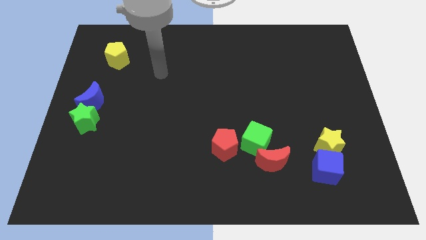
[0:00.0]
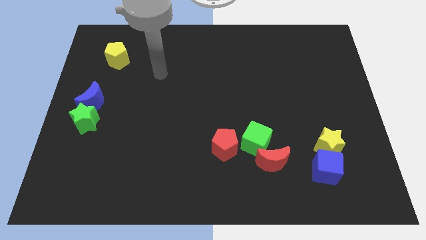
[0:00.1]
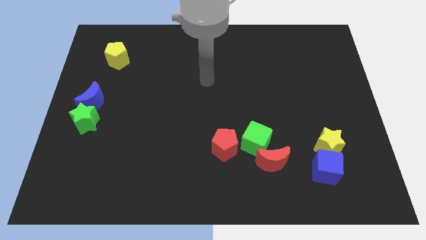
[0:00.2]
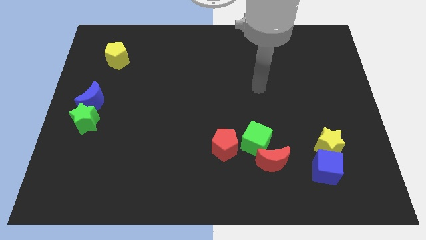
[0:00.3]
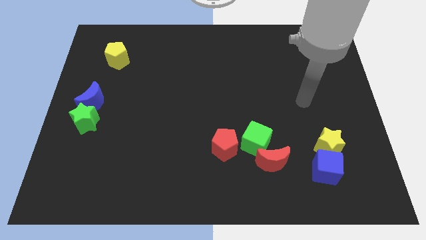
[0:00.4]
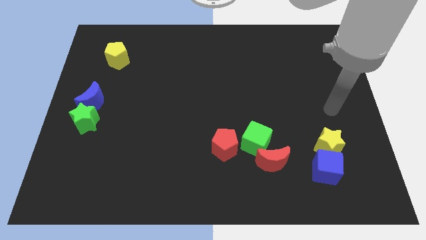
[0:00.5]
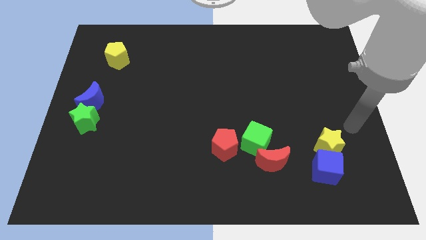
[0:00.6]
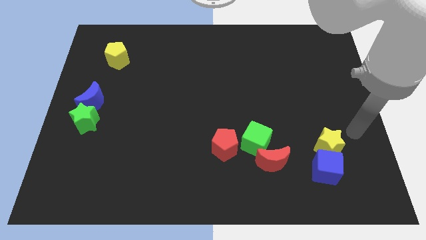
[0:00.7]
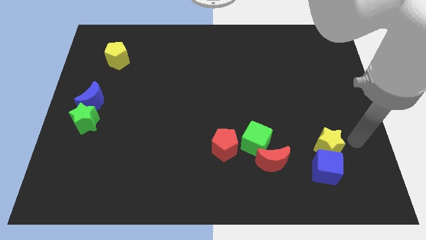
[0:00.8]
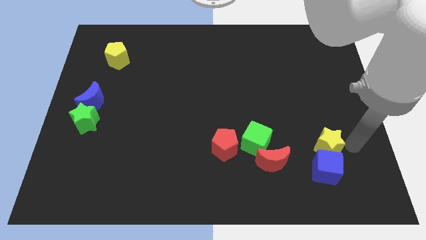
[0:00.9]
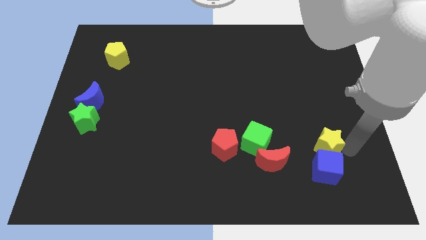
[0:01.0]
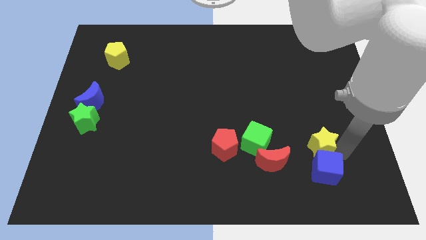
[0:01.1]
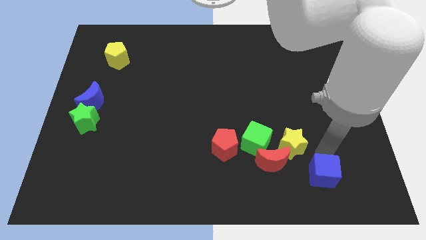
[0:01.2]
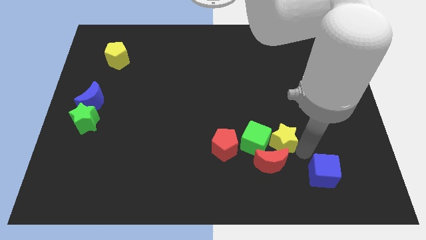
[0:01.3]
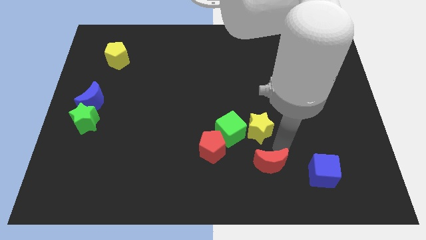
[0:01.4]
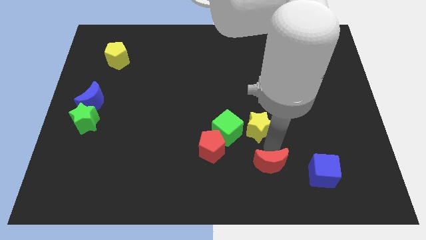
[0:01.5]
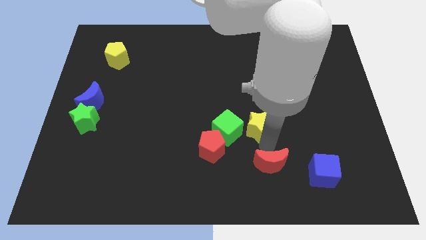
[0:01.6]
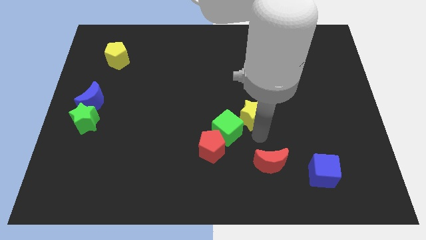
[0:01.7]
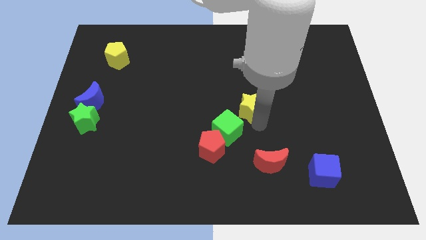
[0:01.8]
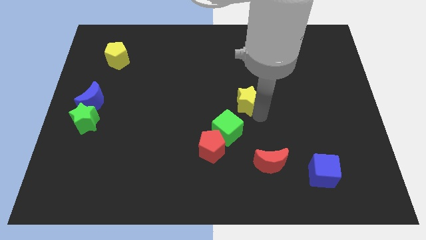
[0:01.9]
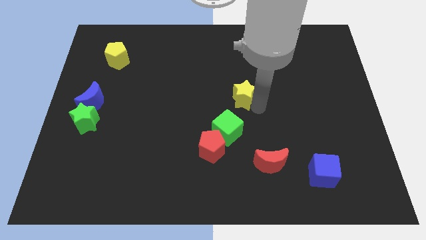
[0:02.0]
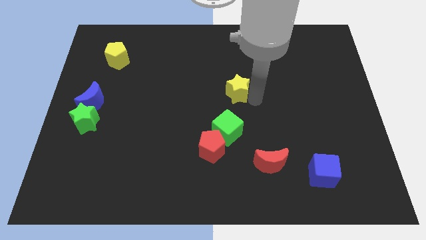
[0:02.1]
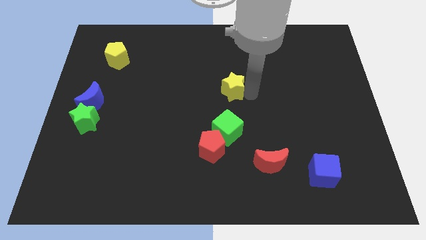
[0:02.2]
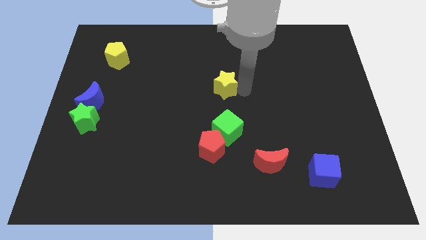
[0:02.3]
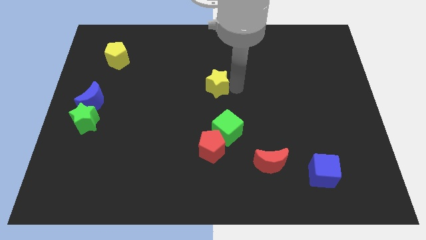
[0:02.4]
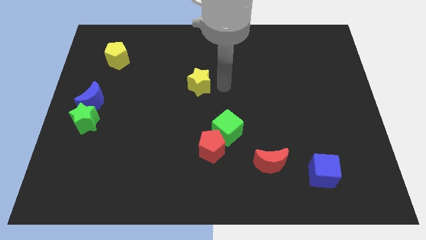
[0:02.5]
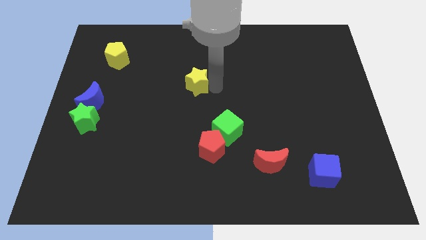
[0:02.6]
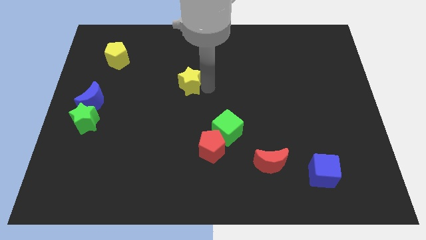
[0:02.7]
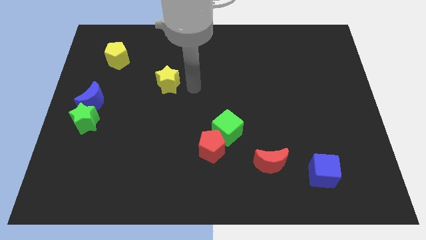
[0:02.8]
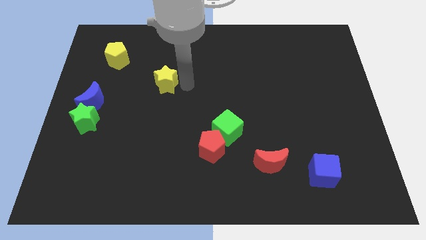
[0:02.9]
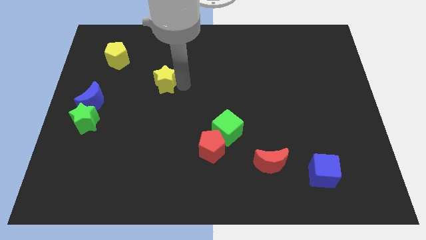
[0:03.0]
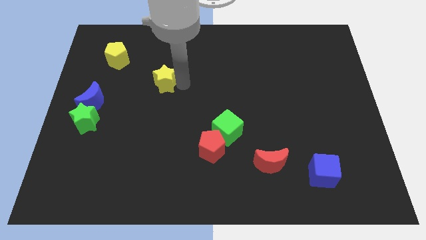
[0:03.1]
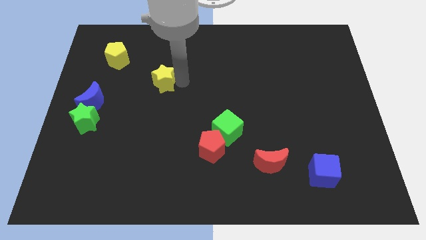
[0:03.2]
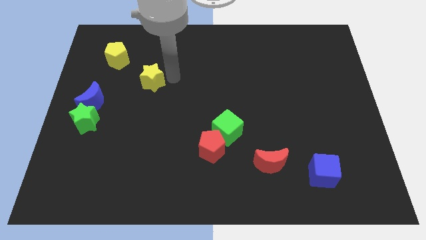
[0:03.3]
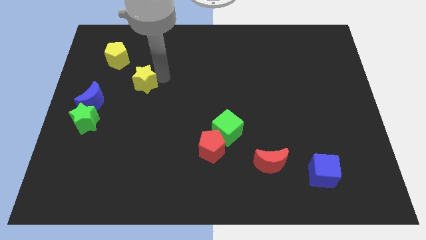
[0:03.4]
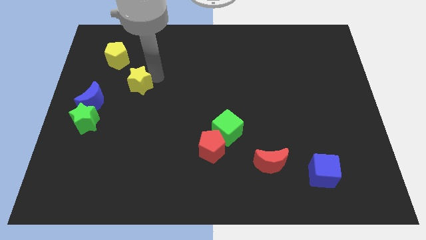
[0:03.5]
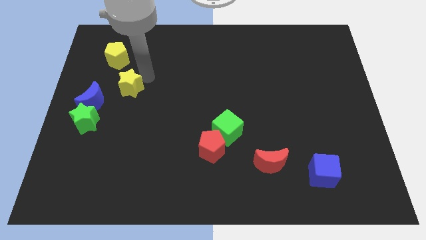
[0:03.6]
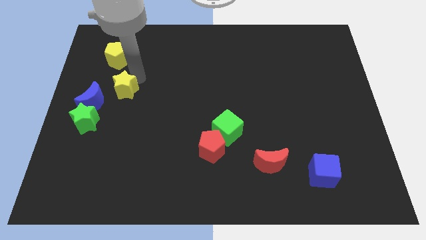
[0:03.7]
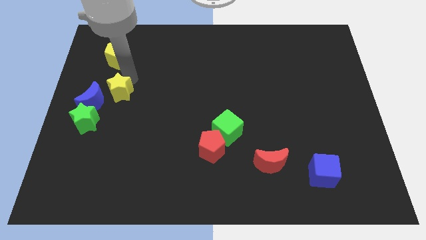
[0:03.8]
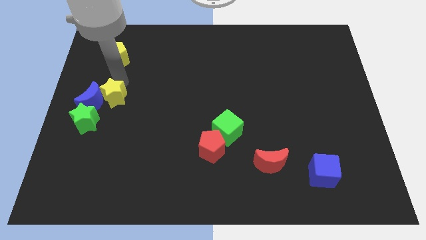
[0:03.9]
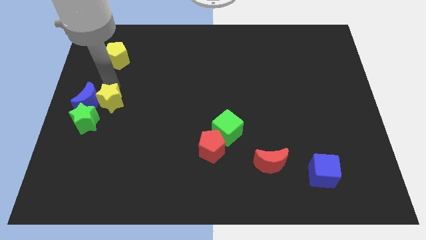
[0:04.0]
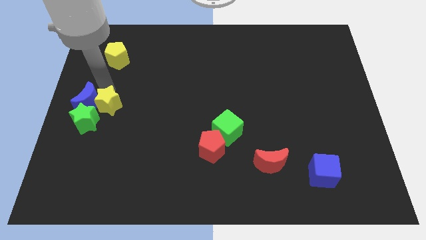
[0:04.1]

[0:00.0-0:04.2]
slide the yellow star close to the blue moon

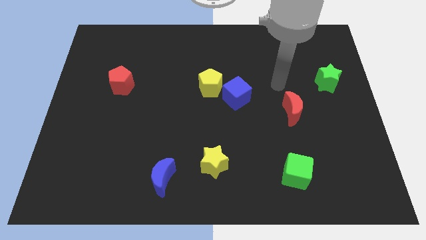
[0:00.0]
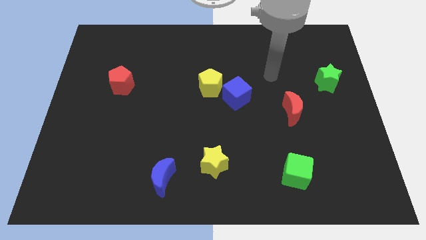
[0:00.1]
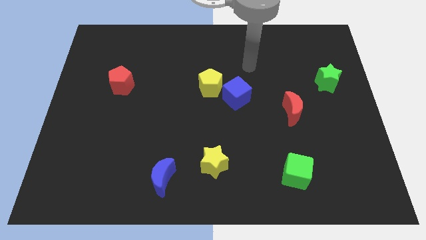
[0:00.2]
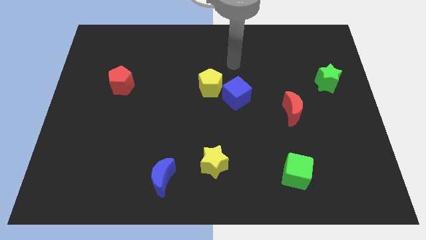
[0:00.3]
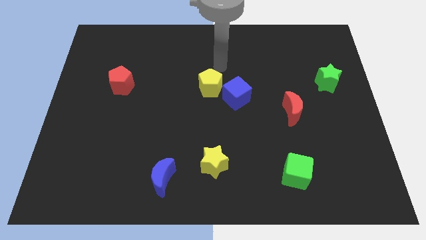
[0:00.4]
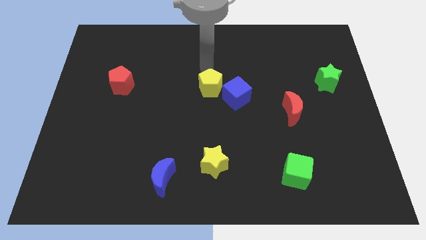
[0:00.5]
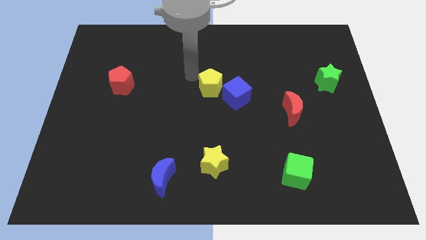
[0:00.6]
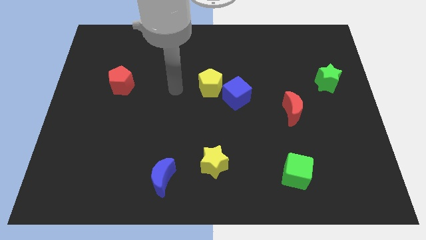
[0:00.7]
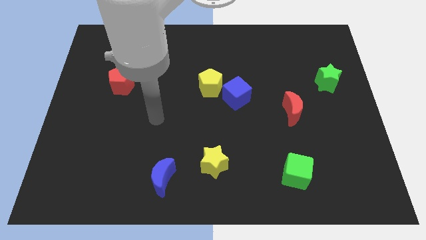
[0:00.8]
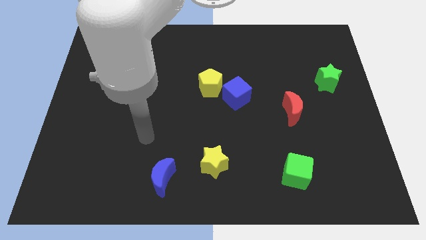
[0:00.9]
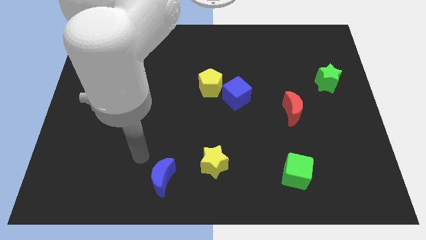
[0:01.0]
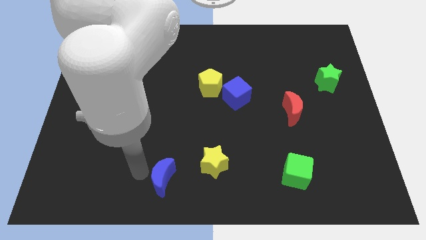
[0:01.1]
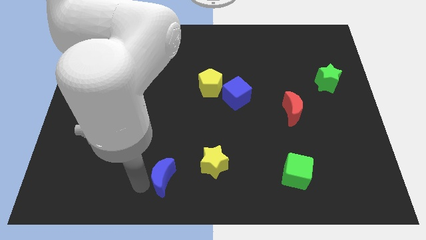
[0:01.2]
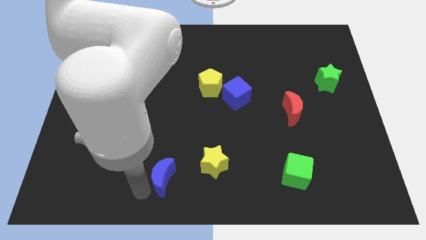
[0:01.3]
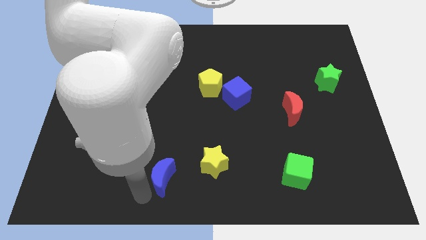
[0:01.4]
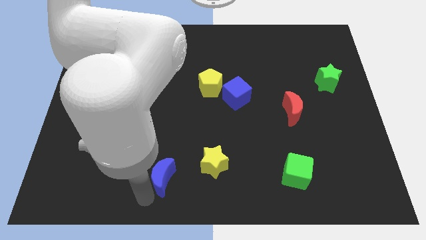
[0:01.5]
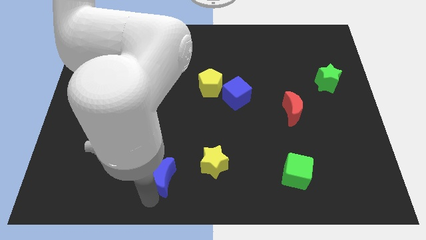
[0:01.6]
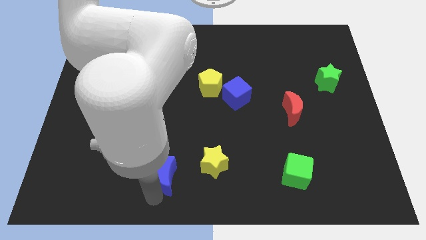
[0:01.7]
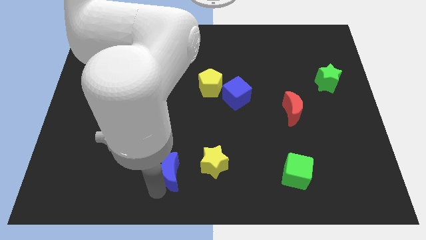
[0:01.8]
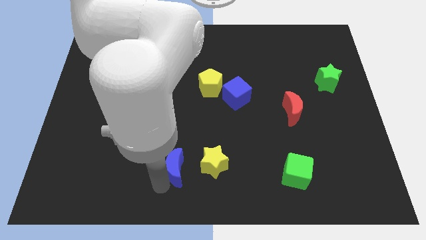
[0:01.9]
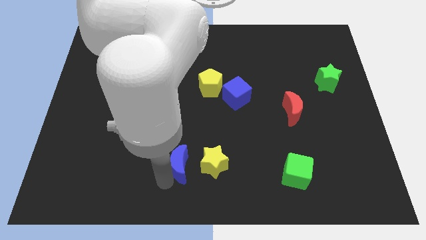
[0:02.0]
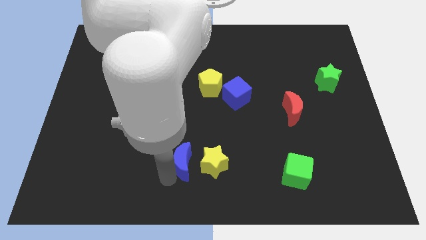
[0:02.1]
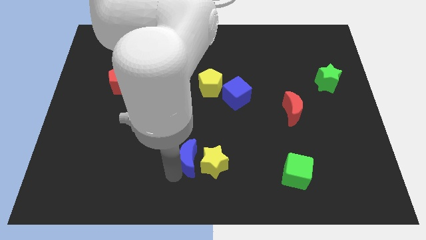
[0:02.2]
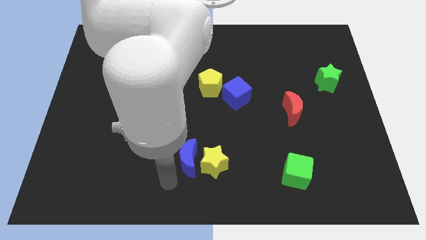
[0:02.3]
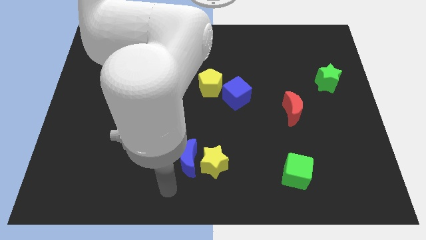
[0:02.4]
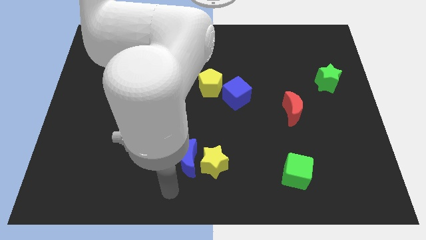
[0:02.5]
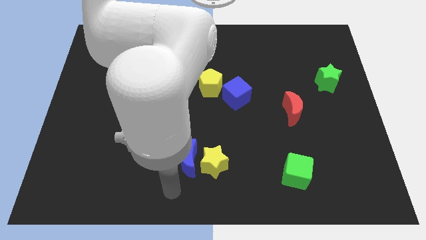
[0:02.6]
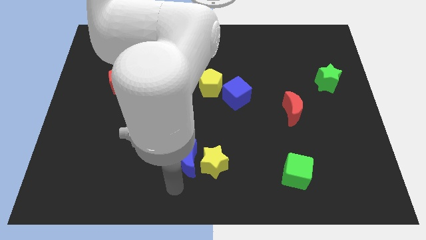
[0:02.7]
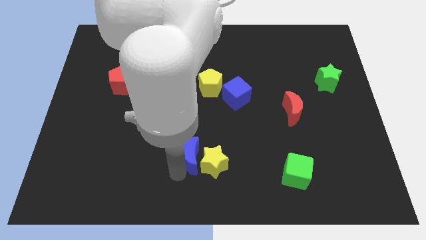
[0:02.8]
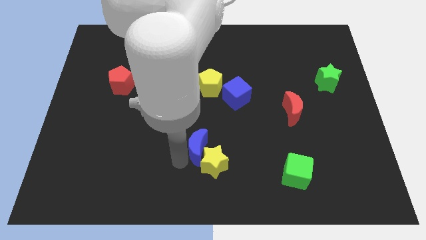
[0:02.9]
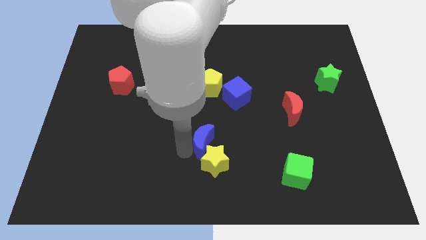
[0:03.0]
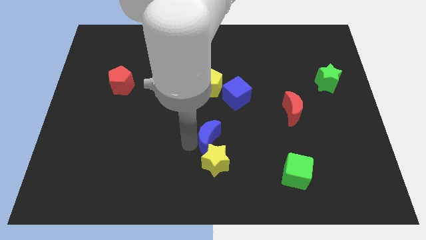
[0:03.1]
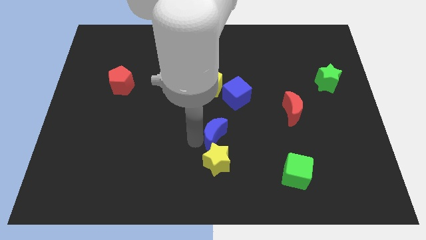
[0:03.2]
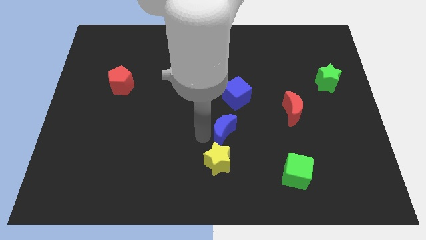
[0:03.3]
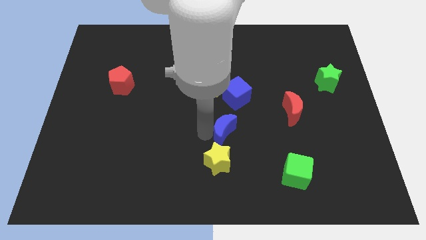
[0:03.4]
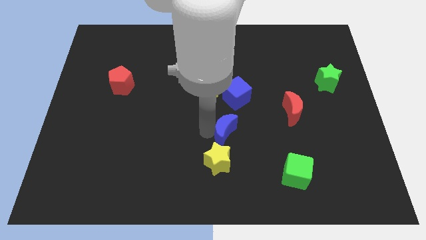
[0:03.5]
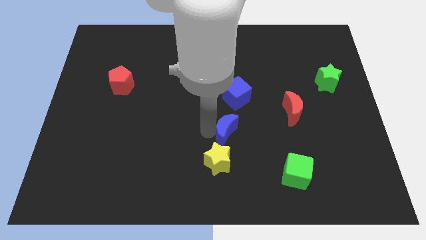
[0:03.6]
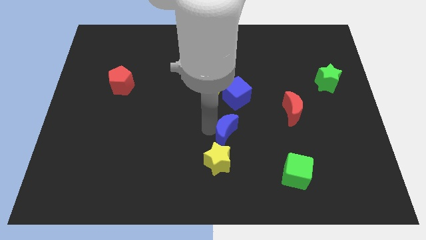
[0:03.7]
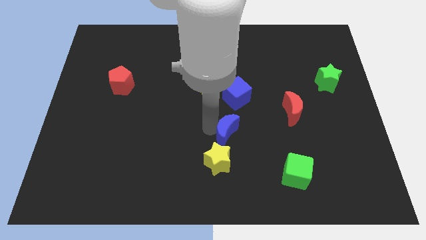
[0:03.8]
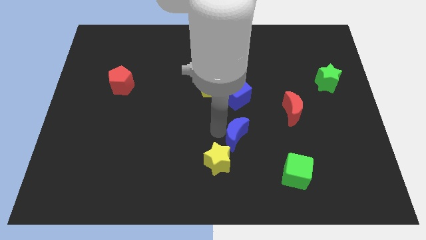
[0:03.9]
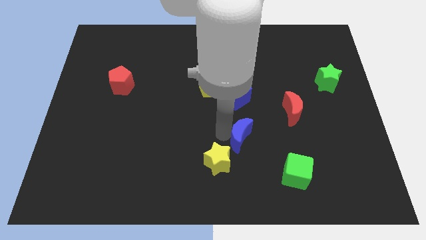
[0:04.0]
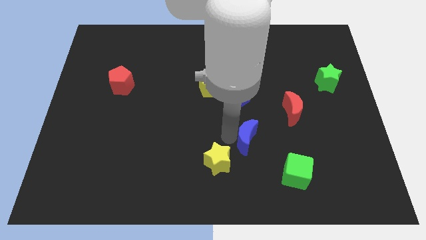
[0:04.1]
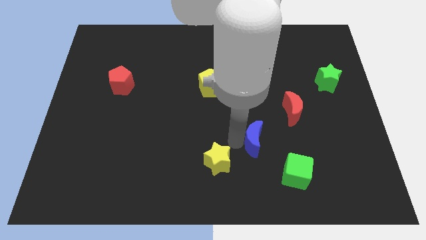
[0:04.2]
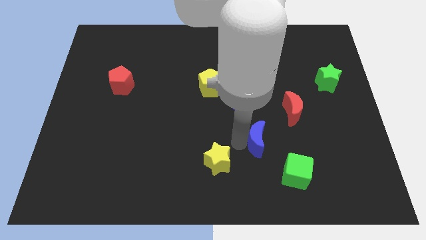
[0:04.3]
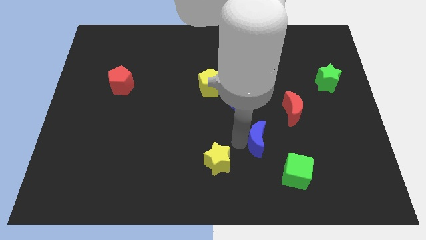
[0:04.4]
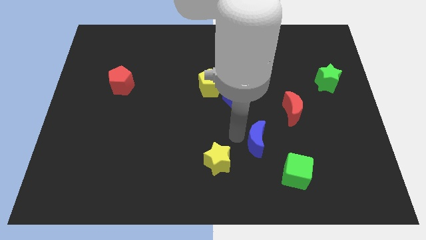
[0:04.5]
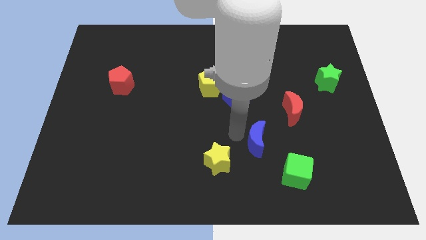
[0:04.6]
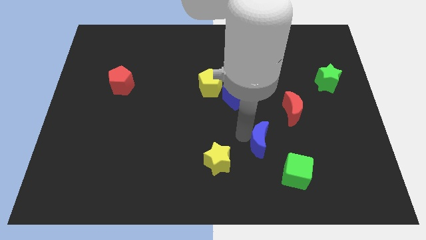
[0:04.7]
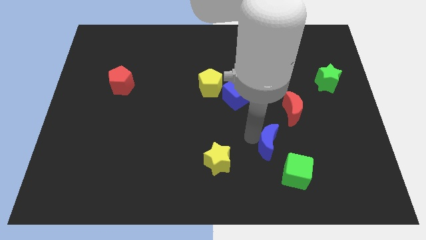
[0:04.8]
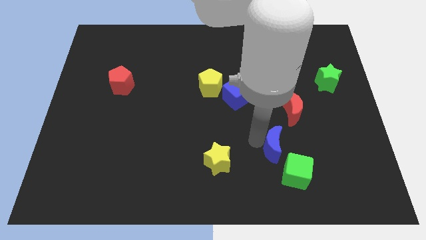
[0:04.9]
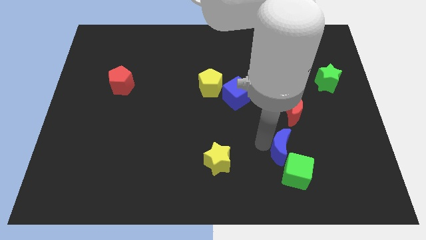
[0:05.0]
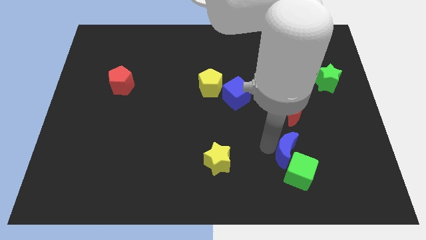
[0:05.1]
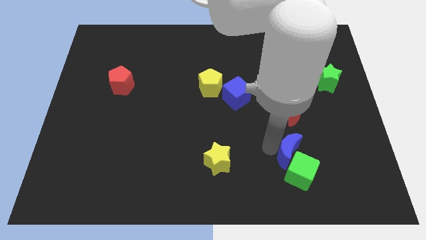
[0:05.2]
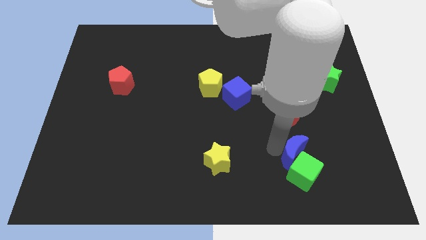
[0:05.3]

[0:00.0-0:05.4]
slide the blue moon towards the green cube
